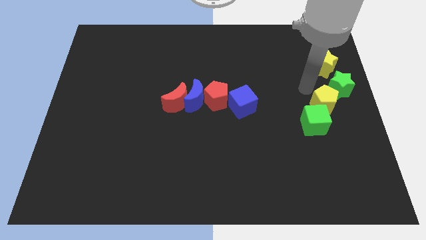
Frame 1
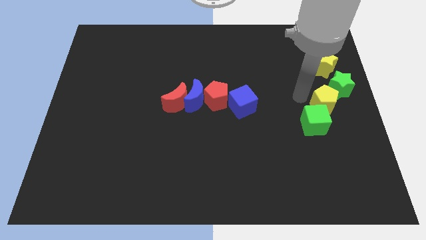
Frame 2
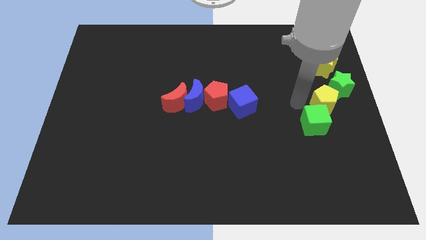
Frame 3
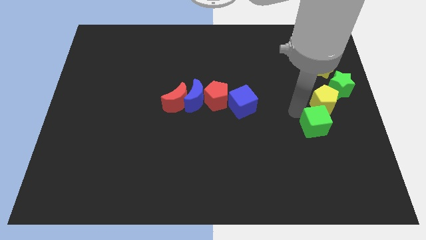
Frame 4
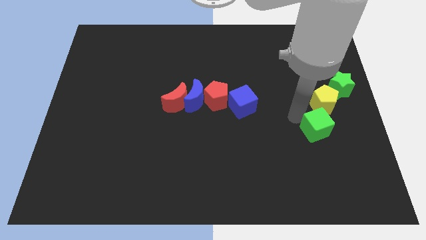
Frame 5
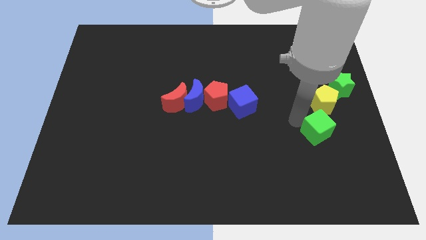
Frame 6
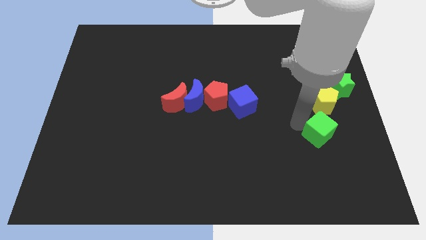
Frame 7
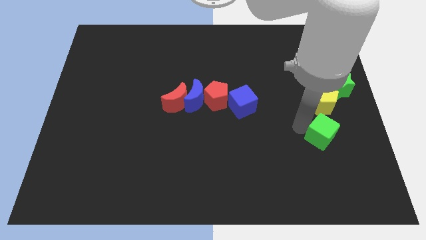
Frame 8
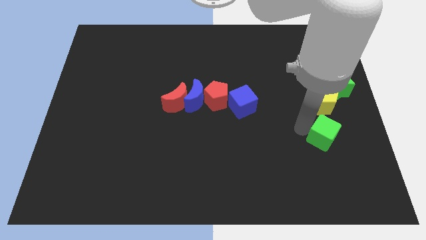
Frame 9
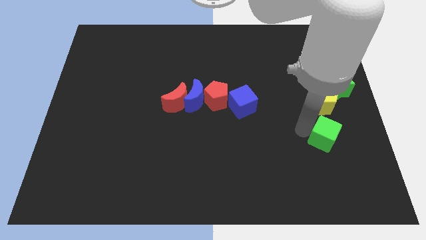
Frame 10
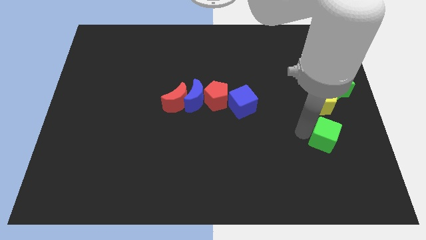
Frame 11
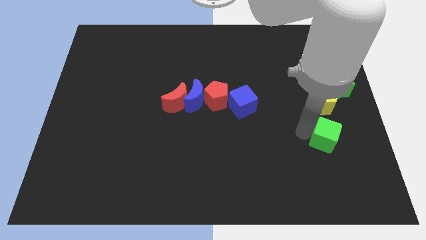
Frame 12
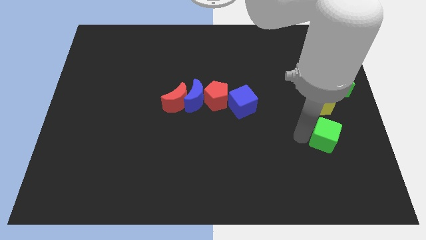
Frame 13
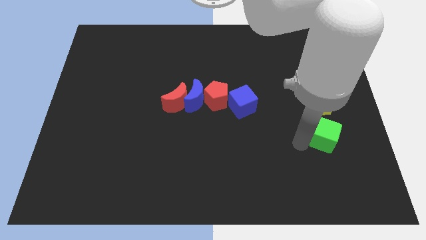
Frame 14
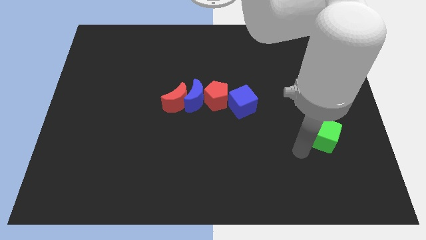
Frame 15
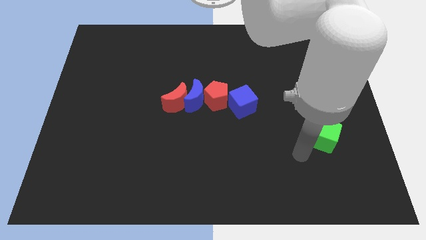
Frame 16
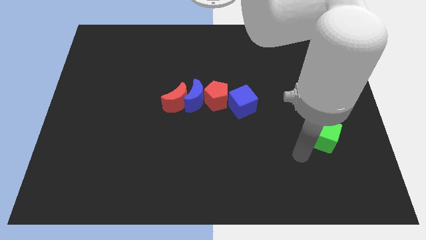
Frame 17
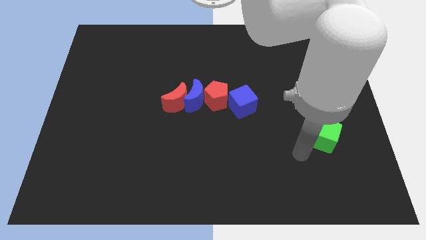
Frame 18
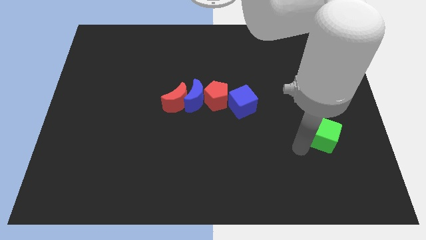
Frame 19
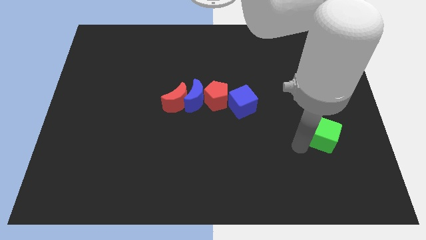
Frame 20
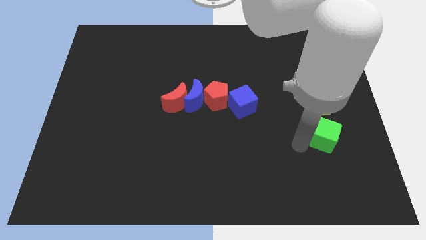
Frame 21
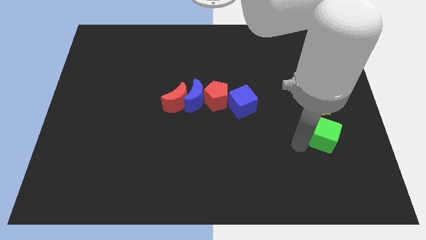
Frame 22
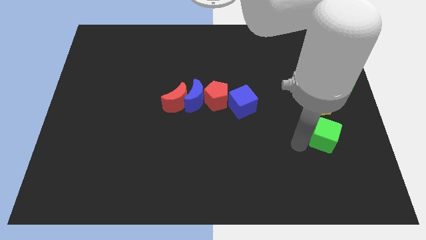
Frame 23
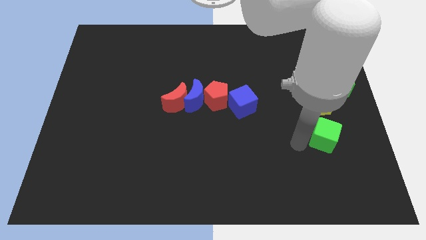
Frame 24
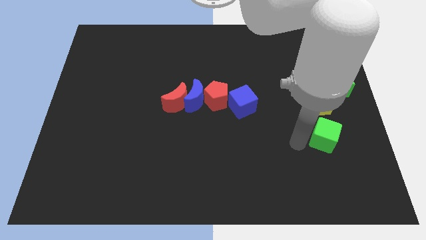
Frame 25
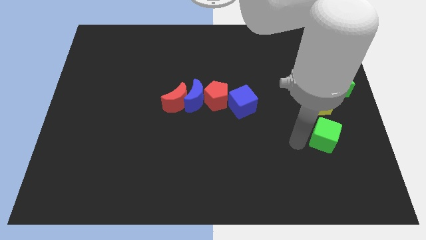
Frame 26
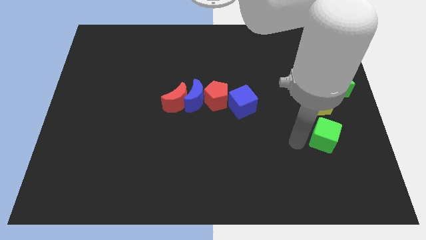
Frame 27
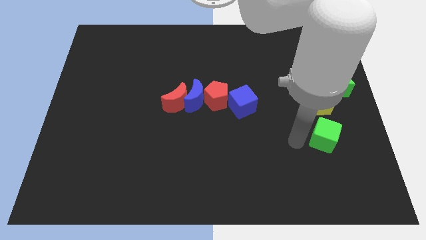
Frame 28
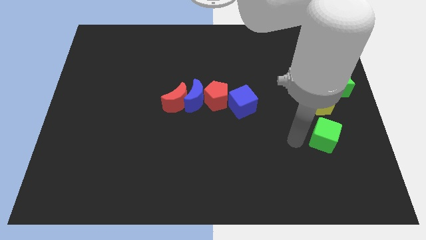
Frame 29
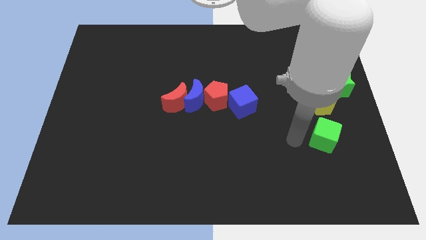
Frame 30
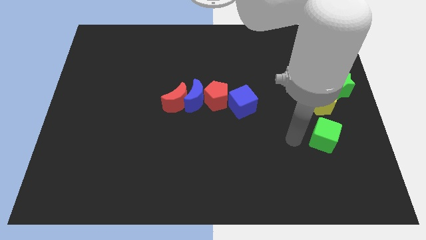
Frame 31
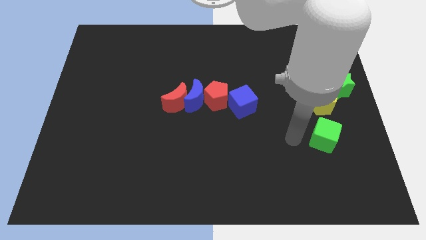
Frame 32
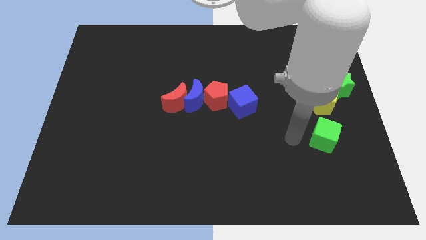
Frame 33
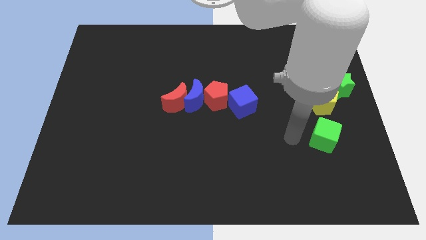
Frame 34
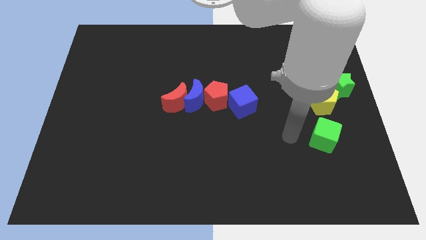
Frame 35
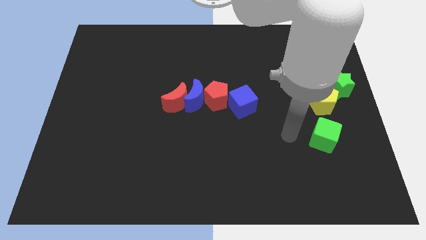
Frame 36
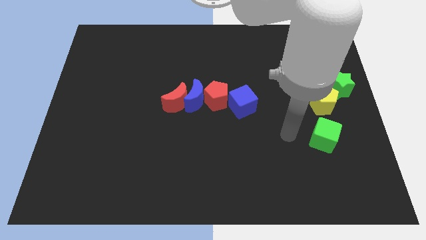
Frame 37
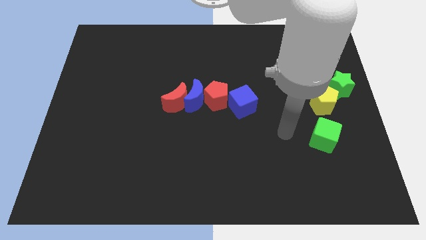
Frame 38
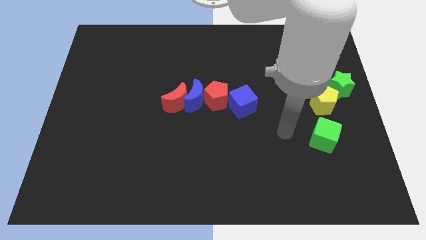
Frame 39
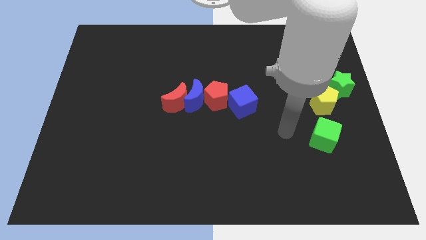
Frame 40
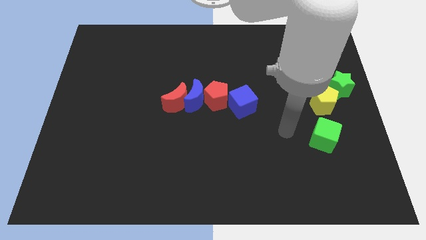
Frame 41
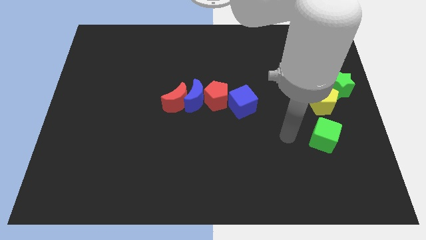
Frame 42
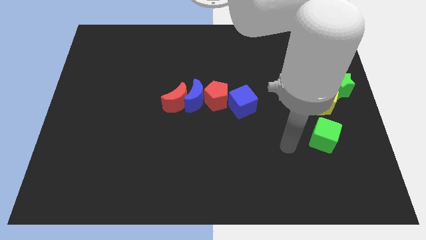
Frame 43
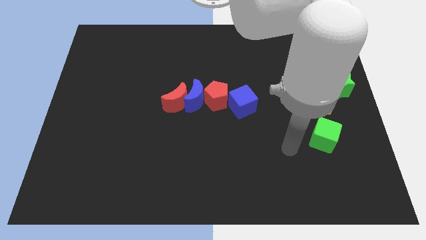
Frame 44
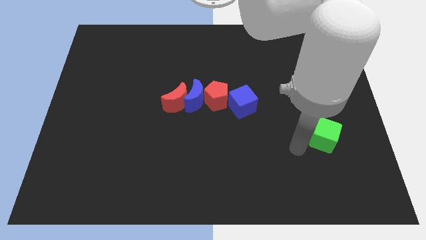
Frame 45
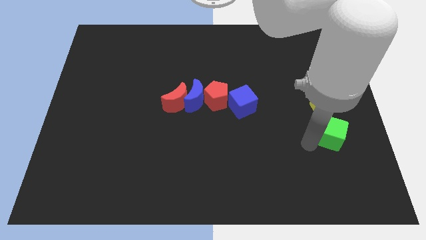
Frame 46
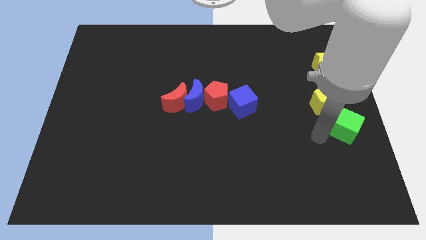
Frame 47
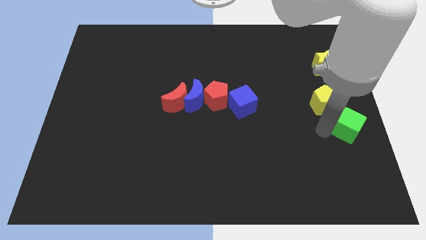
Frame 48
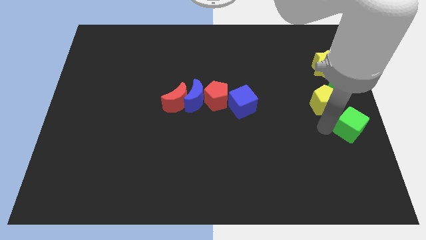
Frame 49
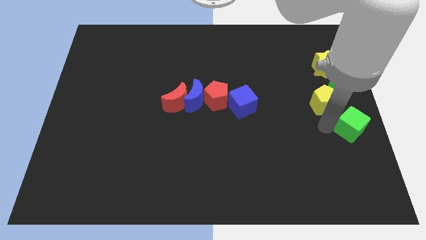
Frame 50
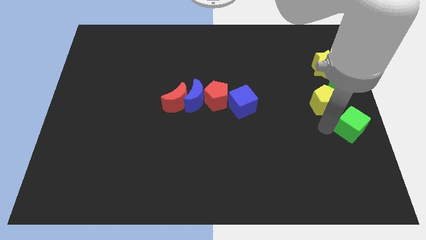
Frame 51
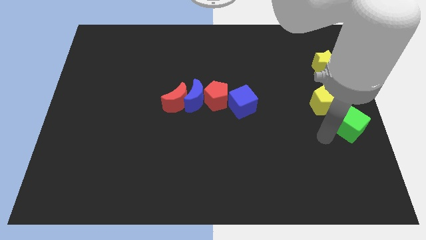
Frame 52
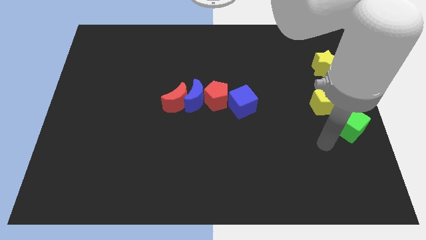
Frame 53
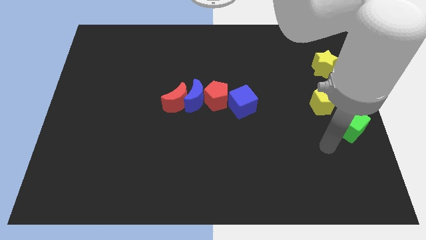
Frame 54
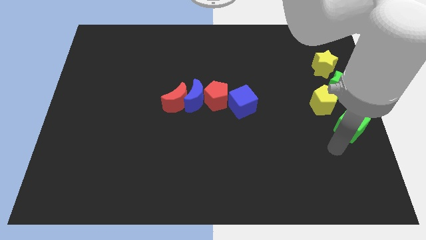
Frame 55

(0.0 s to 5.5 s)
push the green cube to the right side of the board

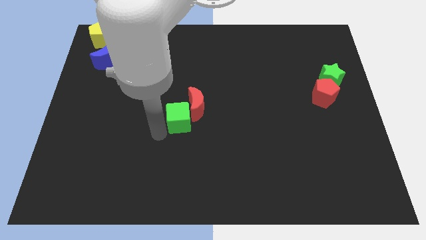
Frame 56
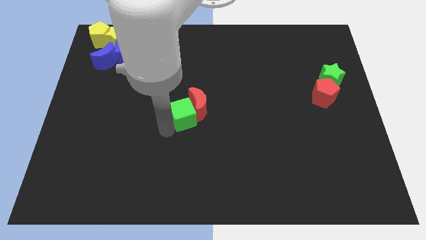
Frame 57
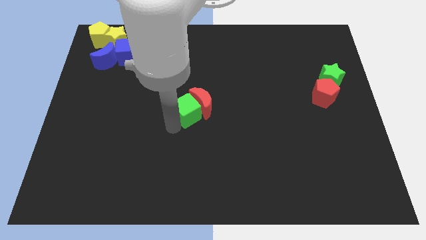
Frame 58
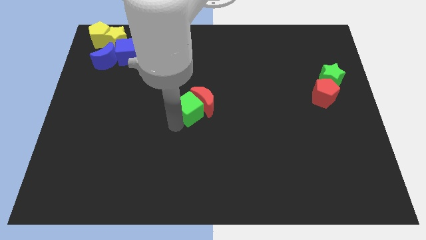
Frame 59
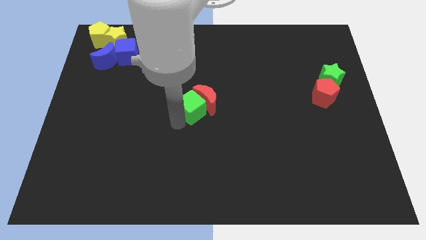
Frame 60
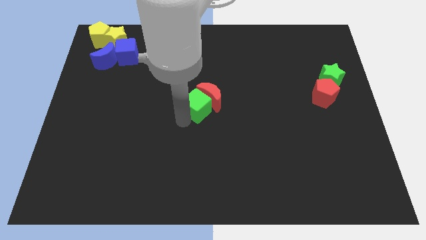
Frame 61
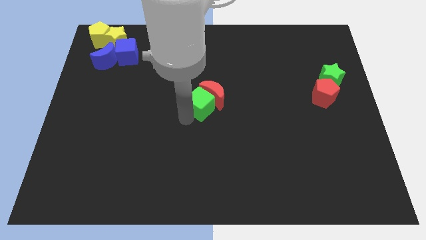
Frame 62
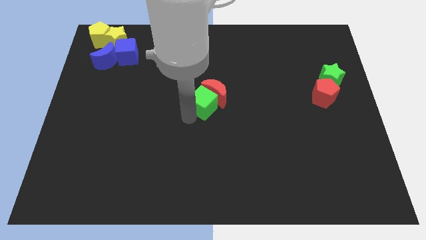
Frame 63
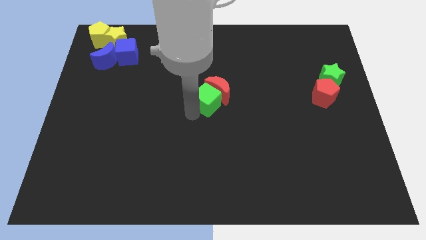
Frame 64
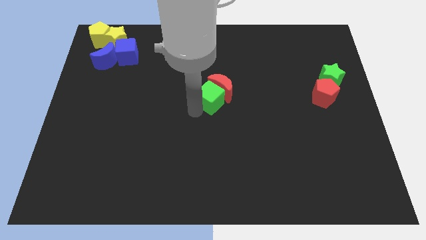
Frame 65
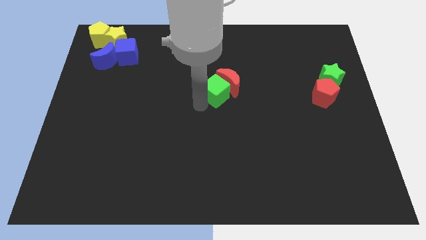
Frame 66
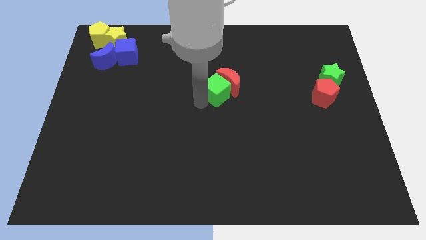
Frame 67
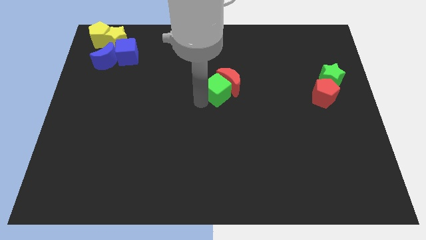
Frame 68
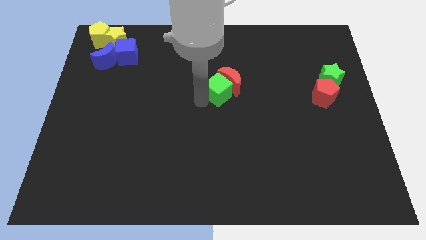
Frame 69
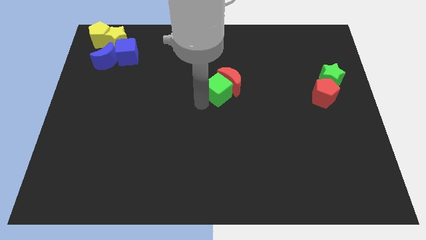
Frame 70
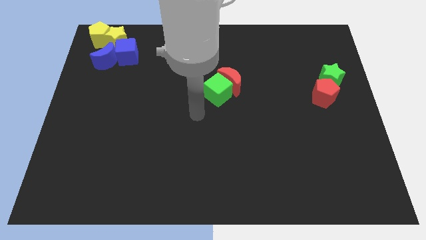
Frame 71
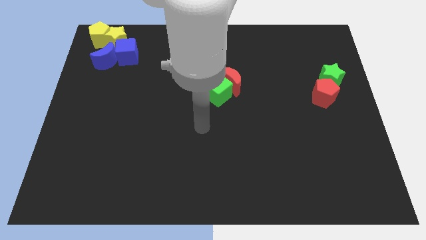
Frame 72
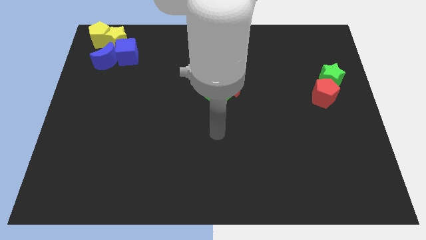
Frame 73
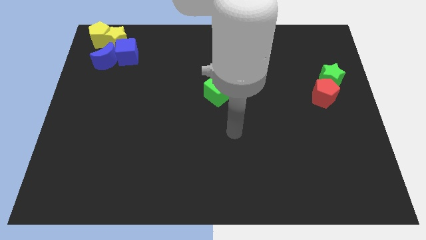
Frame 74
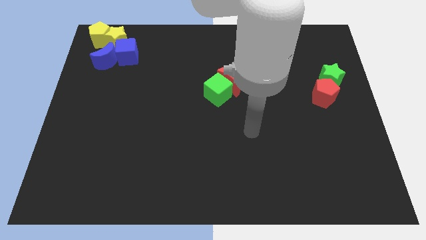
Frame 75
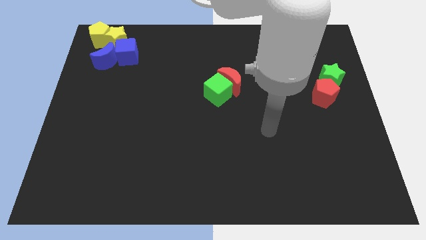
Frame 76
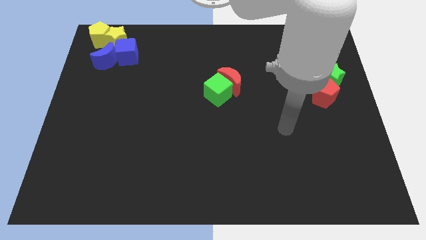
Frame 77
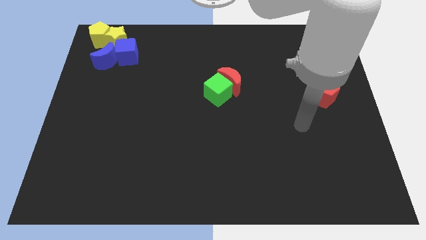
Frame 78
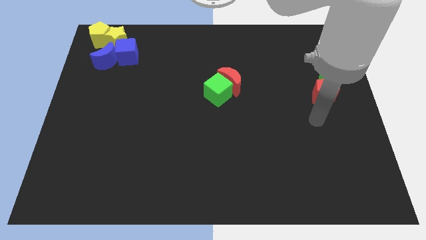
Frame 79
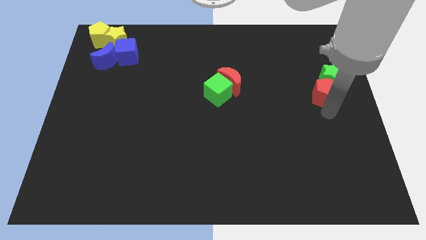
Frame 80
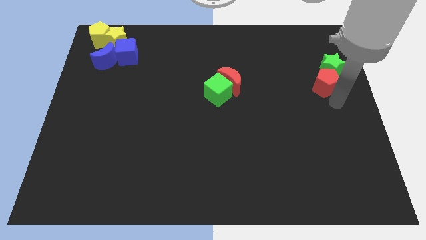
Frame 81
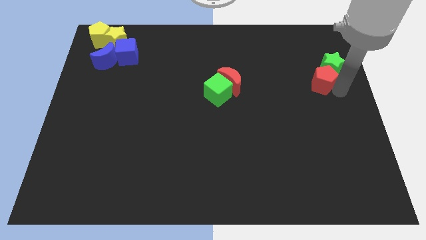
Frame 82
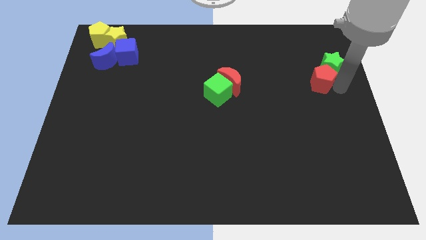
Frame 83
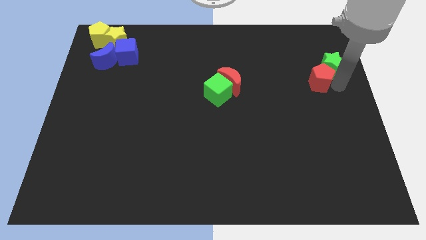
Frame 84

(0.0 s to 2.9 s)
push green cube slightly towards right side

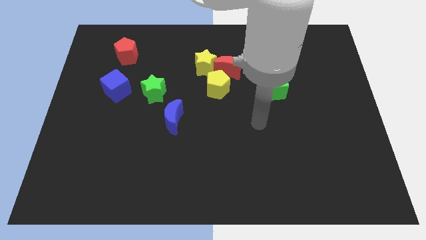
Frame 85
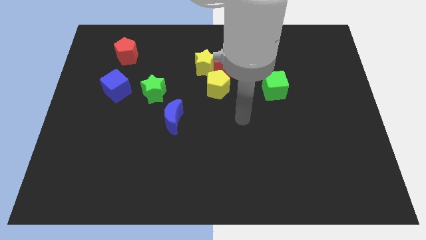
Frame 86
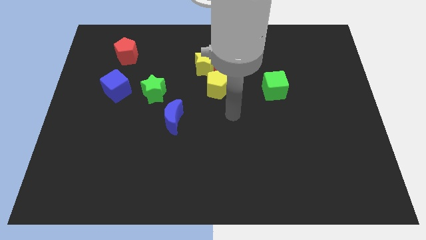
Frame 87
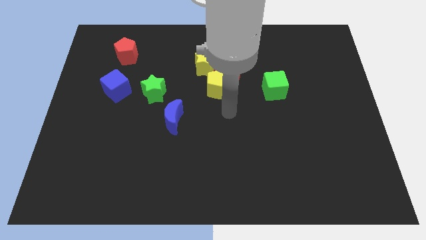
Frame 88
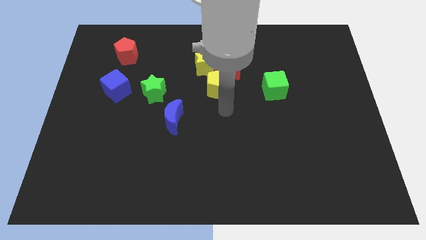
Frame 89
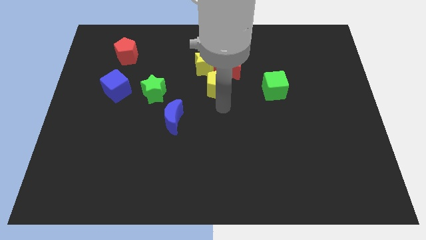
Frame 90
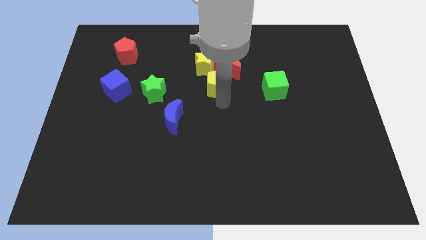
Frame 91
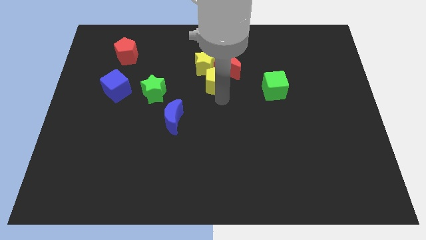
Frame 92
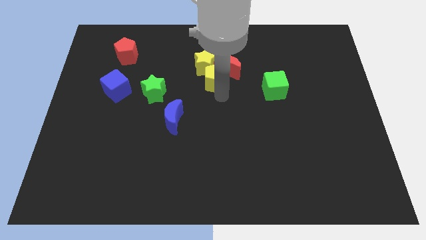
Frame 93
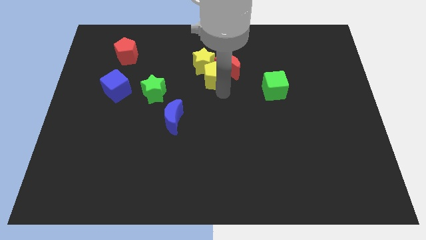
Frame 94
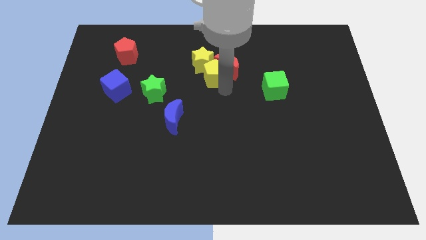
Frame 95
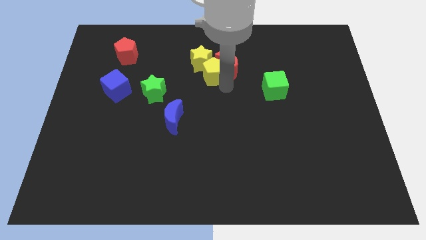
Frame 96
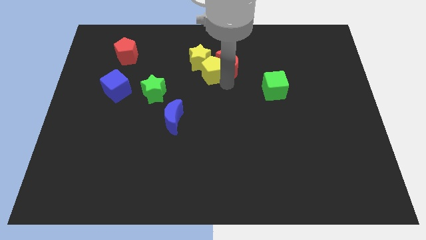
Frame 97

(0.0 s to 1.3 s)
push the yellow pentagon into the bottom right to the yellow star
